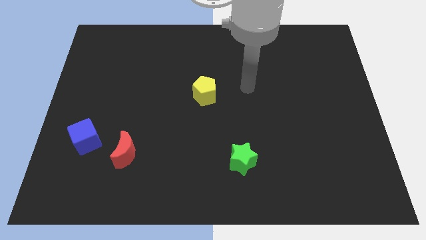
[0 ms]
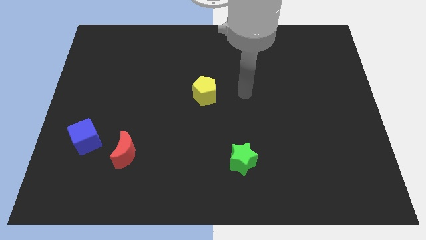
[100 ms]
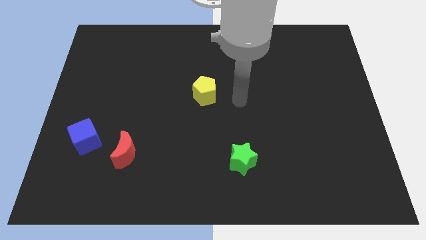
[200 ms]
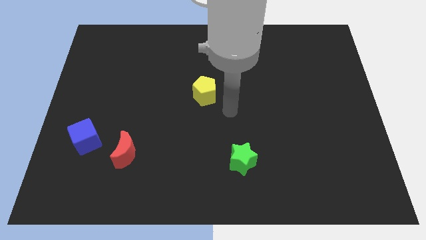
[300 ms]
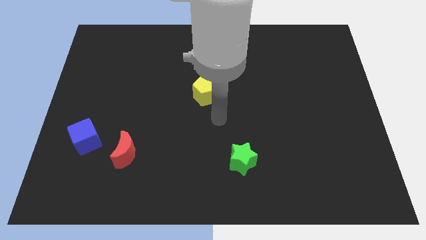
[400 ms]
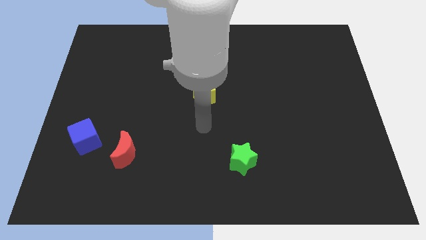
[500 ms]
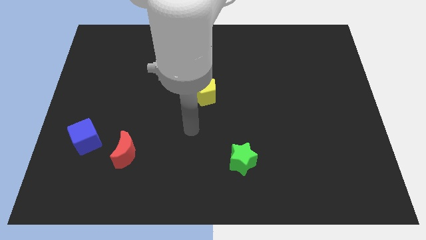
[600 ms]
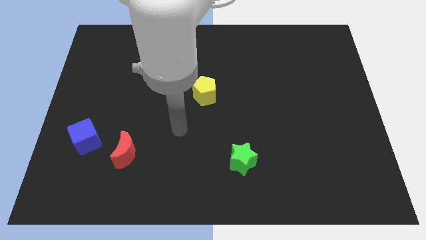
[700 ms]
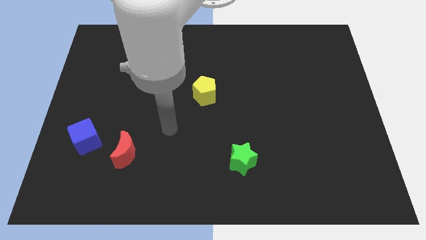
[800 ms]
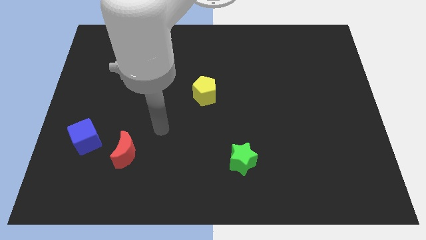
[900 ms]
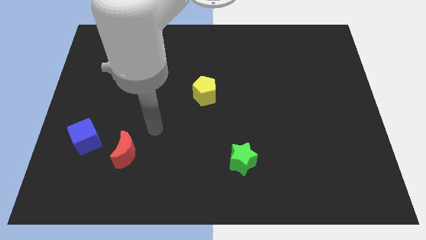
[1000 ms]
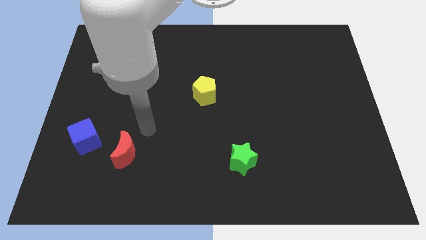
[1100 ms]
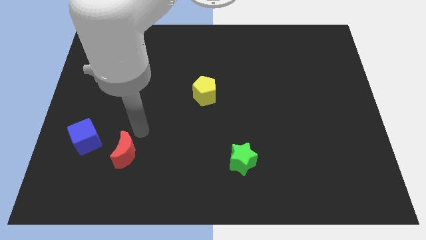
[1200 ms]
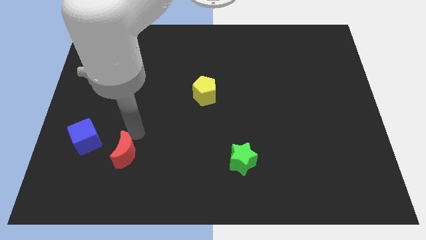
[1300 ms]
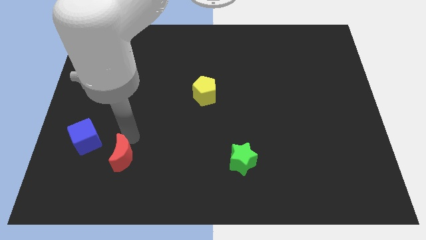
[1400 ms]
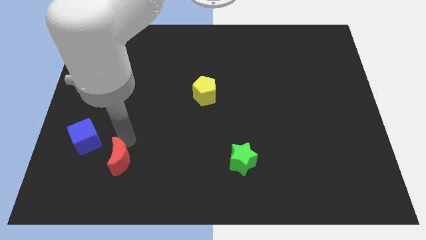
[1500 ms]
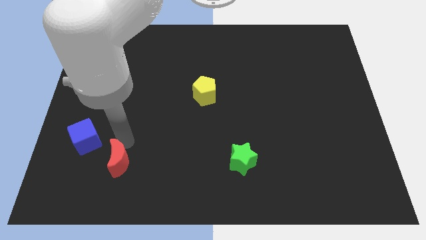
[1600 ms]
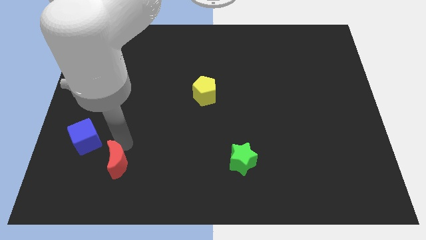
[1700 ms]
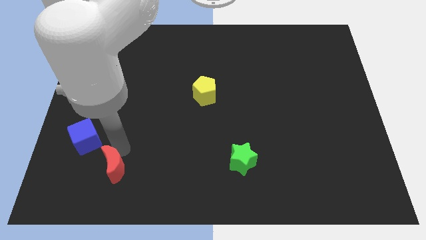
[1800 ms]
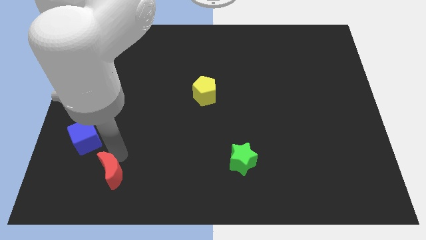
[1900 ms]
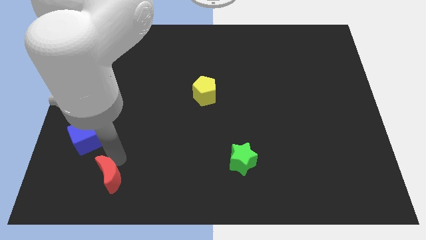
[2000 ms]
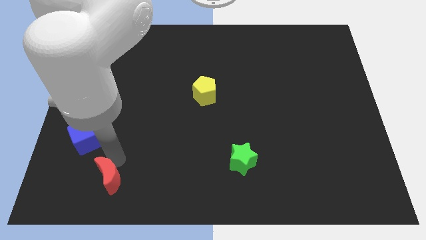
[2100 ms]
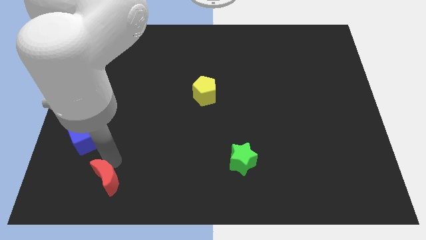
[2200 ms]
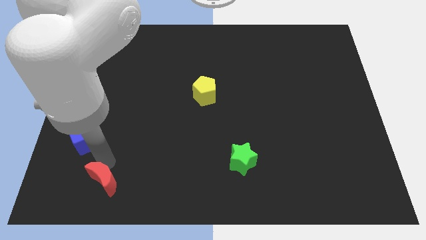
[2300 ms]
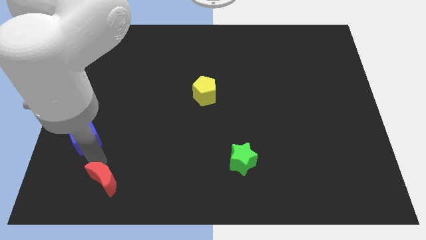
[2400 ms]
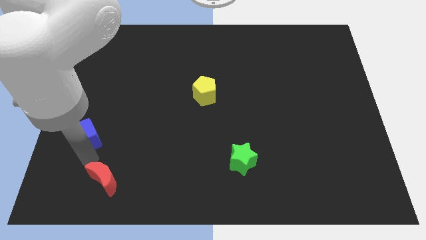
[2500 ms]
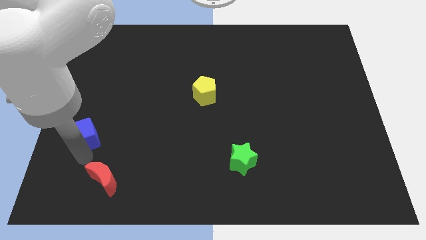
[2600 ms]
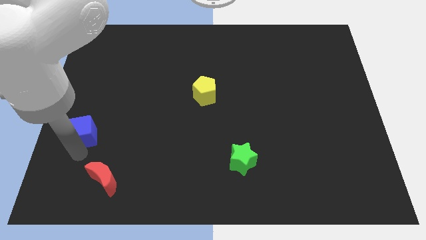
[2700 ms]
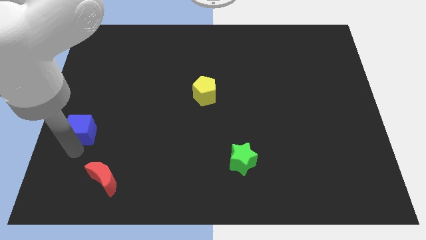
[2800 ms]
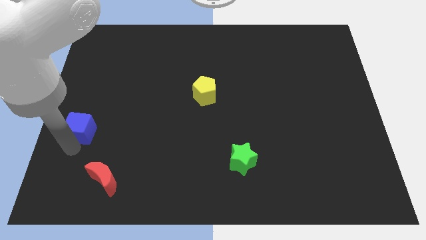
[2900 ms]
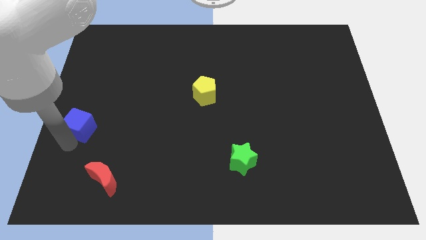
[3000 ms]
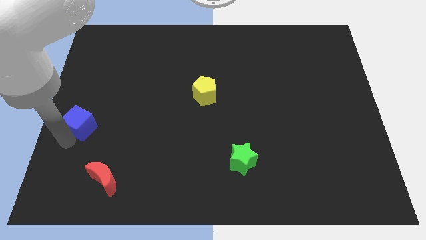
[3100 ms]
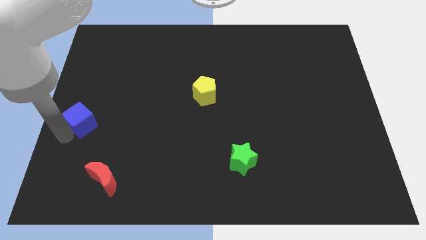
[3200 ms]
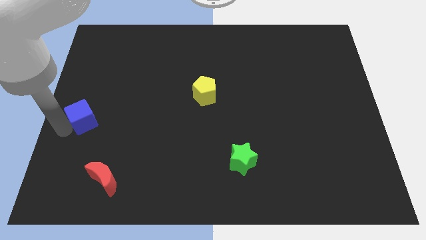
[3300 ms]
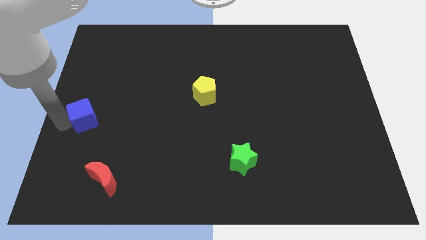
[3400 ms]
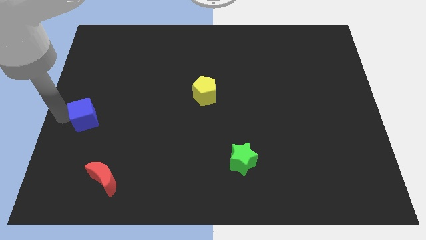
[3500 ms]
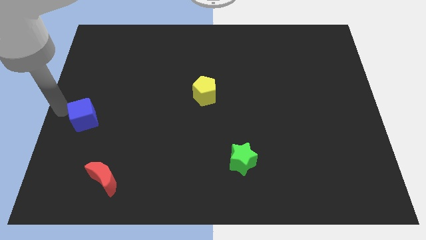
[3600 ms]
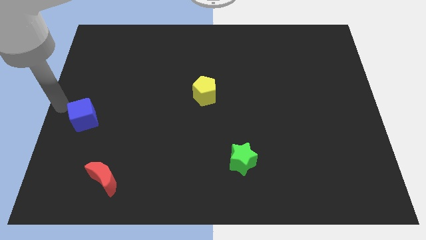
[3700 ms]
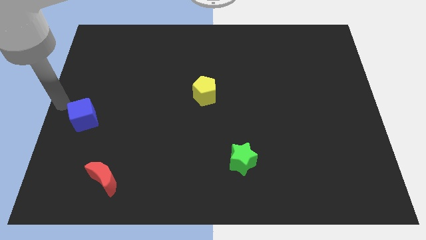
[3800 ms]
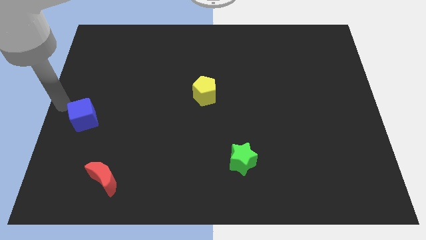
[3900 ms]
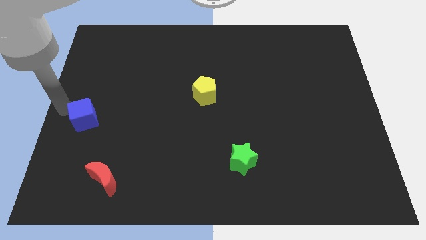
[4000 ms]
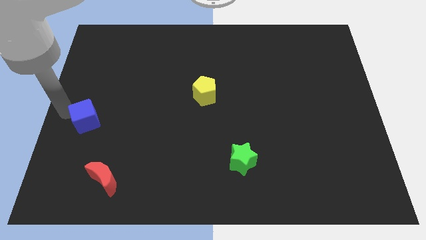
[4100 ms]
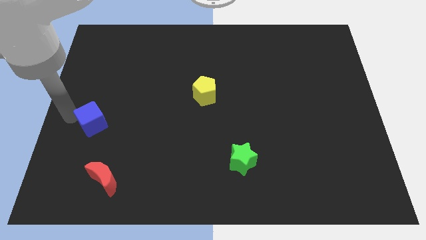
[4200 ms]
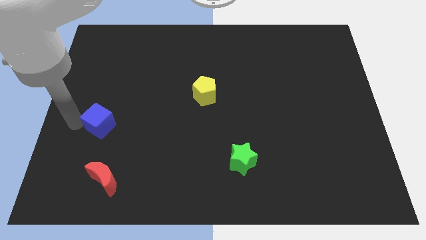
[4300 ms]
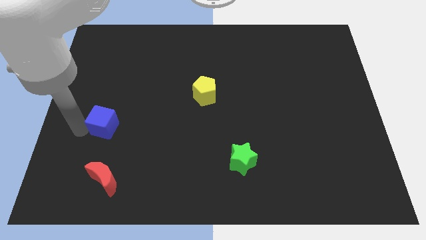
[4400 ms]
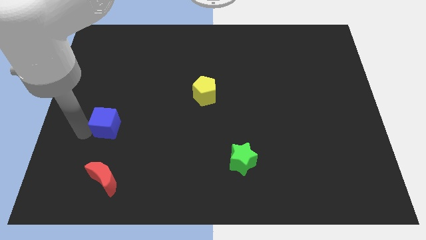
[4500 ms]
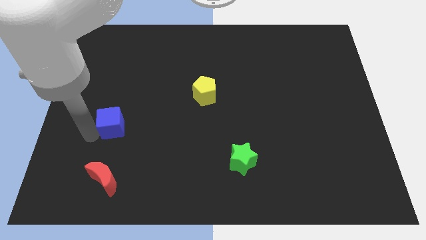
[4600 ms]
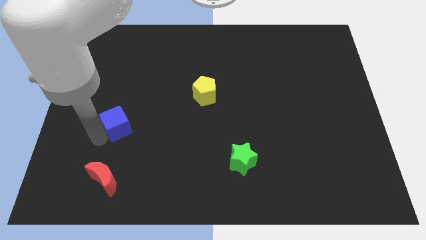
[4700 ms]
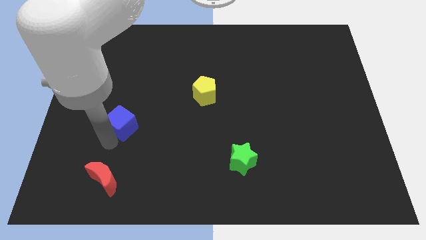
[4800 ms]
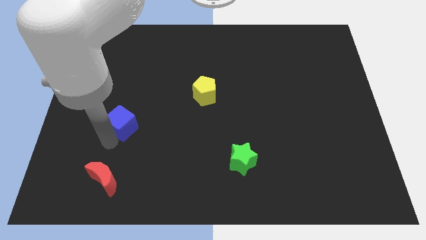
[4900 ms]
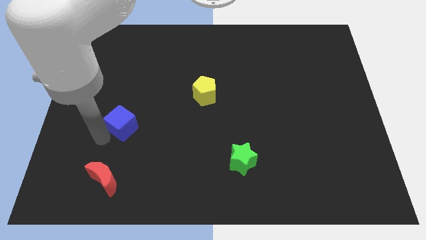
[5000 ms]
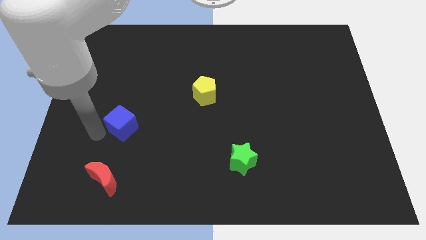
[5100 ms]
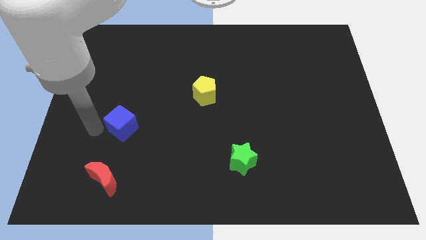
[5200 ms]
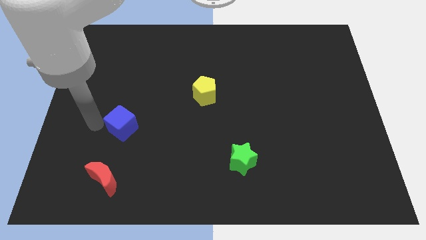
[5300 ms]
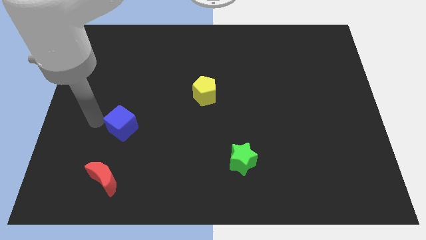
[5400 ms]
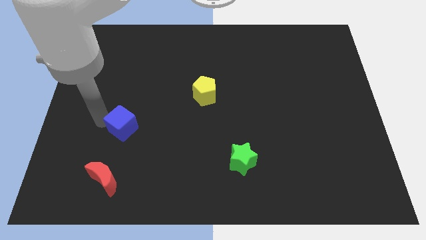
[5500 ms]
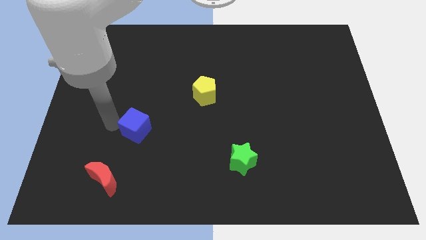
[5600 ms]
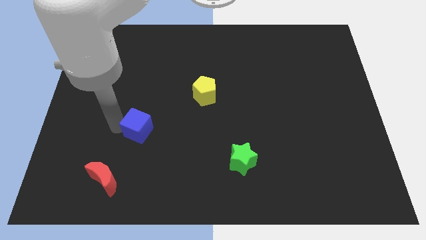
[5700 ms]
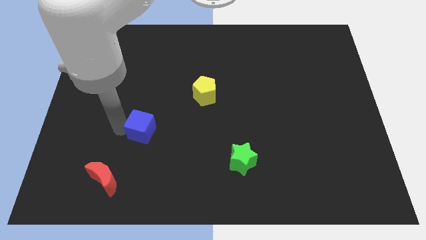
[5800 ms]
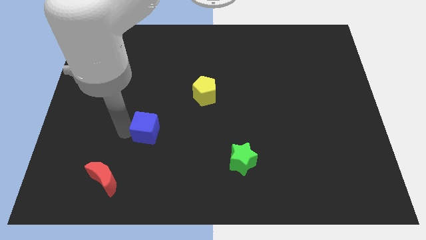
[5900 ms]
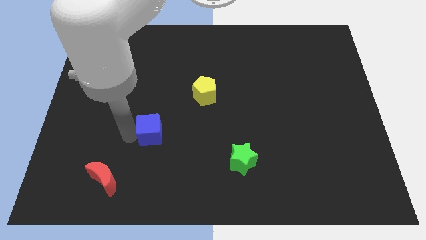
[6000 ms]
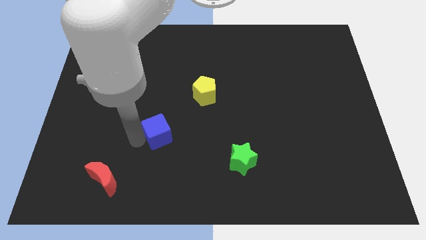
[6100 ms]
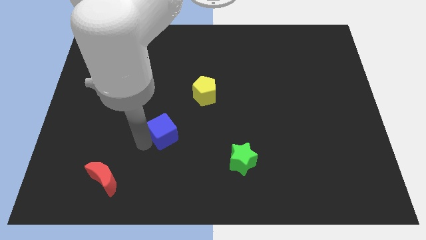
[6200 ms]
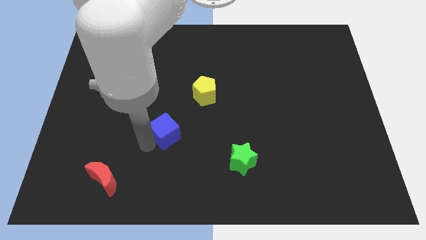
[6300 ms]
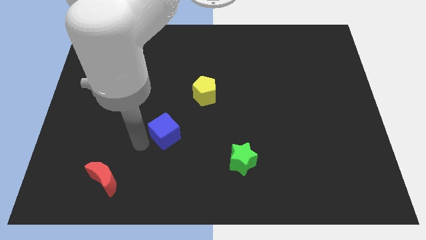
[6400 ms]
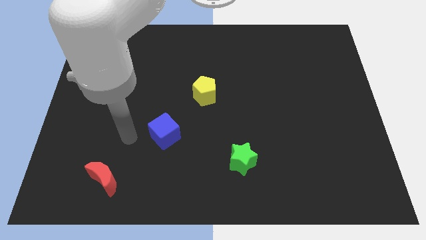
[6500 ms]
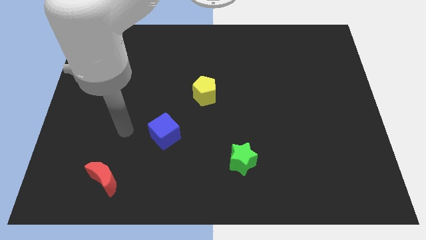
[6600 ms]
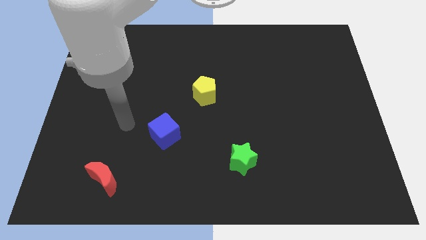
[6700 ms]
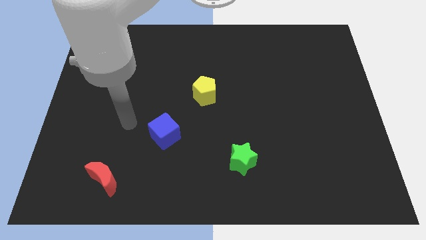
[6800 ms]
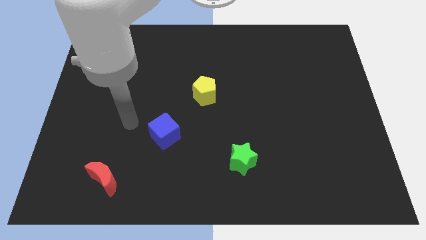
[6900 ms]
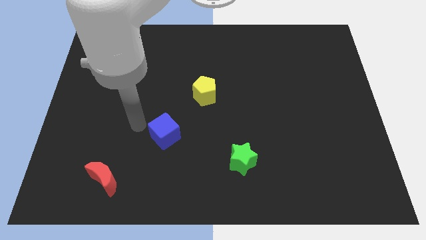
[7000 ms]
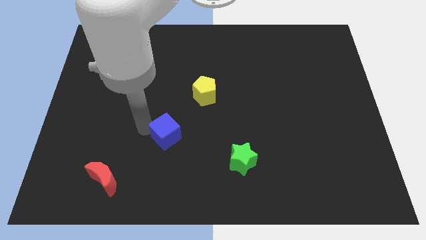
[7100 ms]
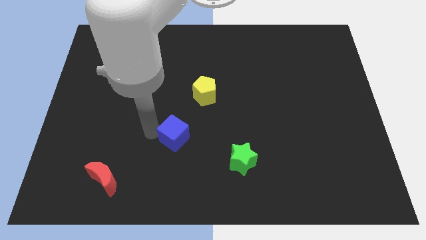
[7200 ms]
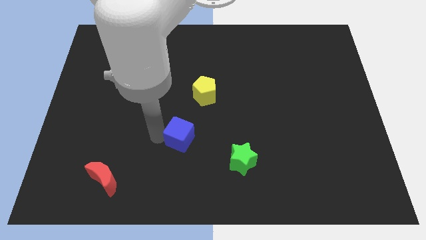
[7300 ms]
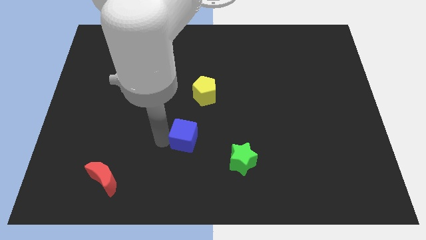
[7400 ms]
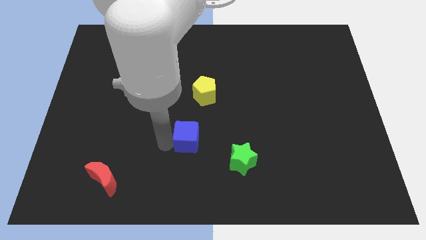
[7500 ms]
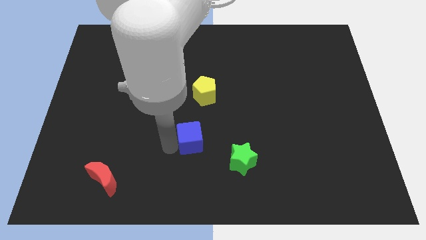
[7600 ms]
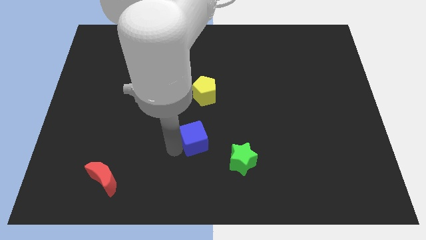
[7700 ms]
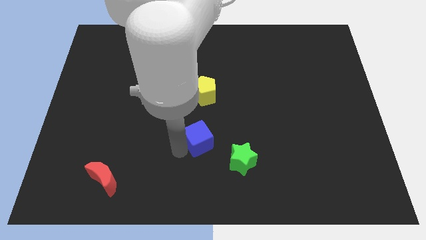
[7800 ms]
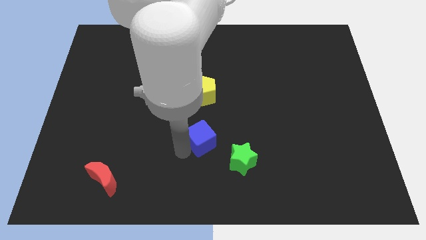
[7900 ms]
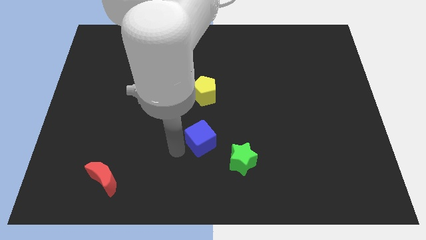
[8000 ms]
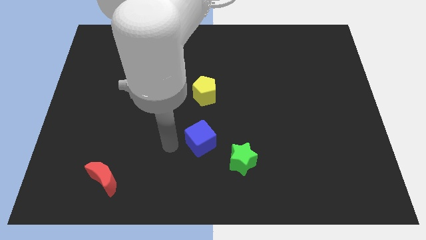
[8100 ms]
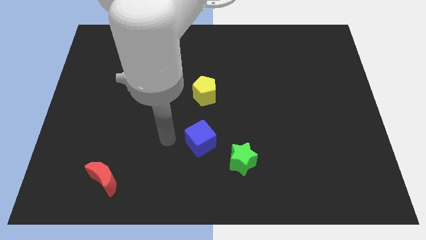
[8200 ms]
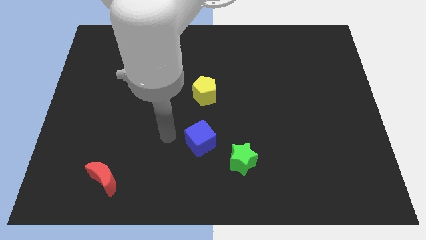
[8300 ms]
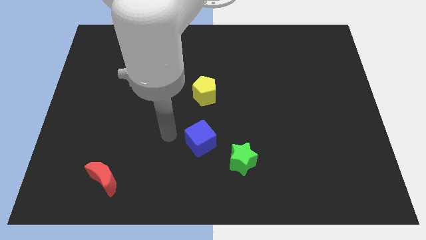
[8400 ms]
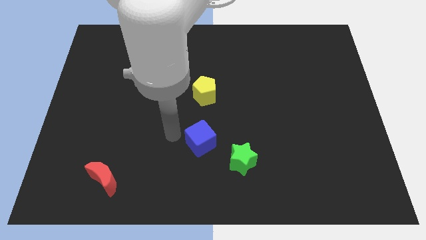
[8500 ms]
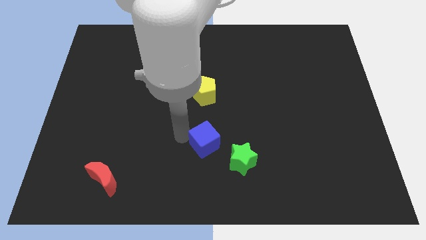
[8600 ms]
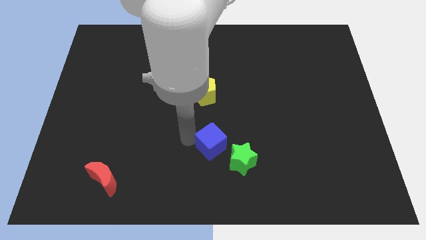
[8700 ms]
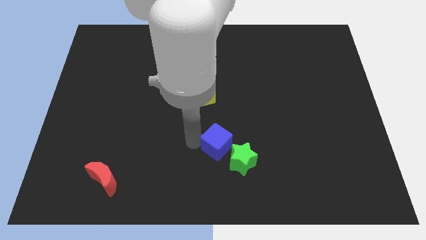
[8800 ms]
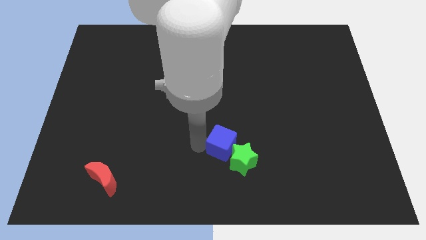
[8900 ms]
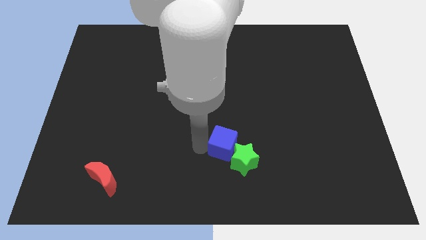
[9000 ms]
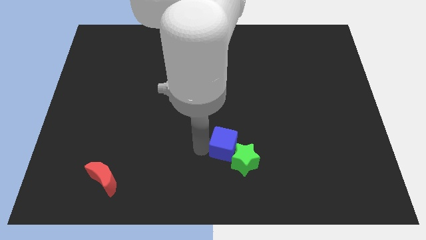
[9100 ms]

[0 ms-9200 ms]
slide the blue cube towards the star
